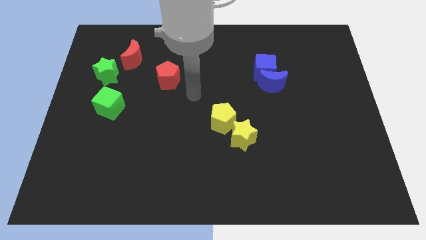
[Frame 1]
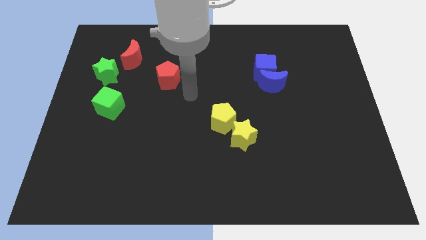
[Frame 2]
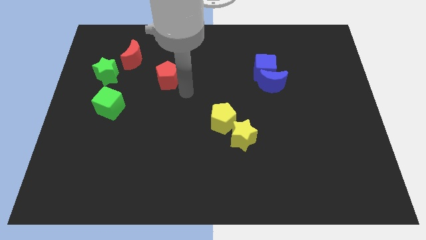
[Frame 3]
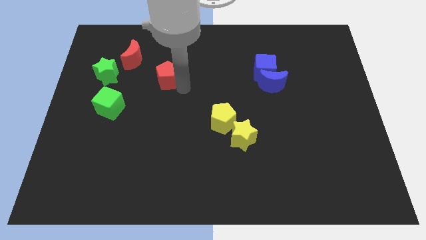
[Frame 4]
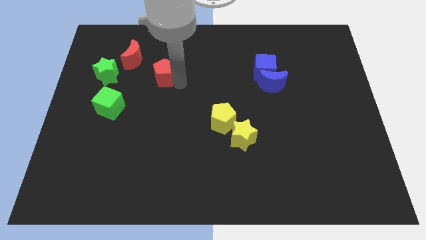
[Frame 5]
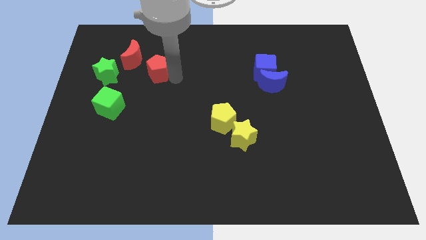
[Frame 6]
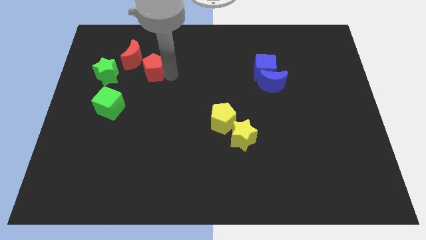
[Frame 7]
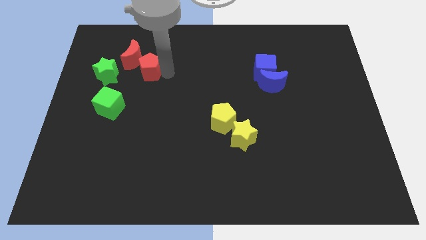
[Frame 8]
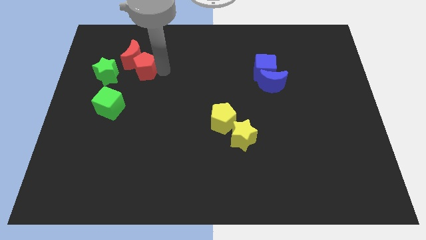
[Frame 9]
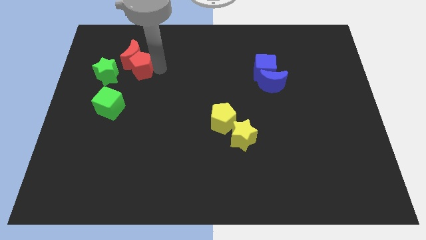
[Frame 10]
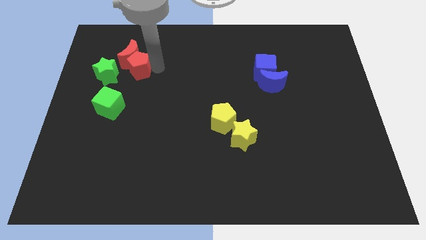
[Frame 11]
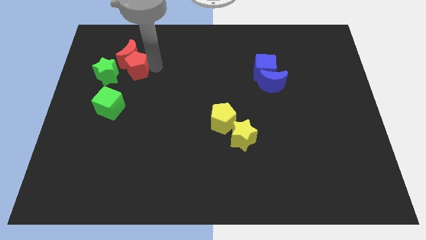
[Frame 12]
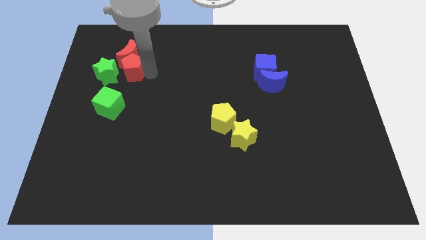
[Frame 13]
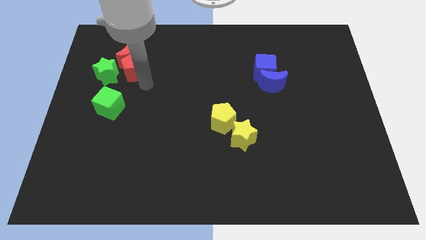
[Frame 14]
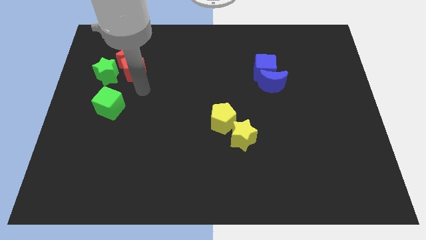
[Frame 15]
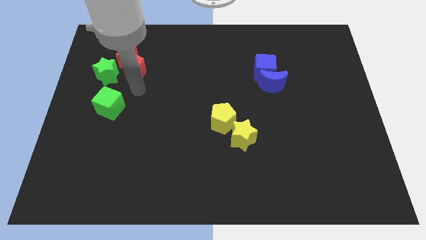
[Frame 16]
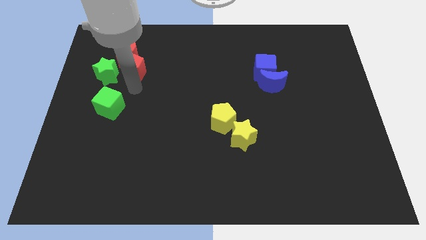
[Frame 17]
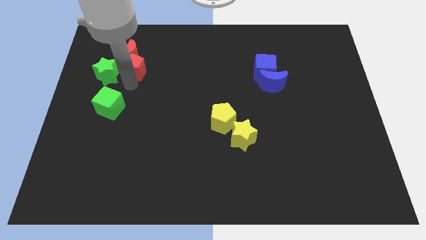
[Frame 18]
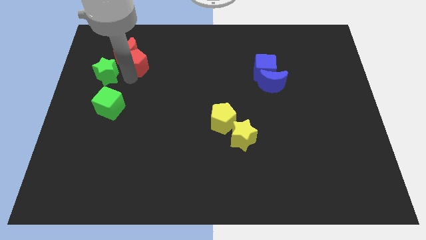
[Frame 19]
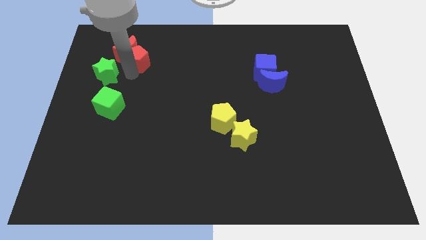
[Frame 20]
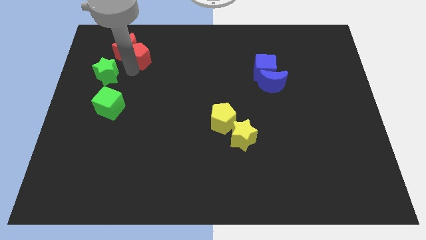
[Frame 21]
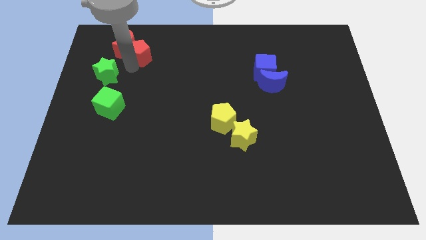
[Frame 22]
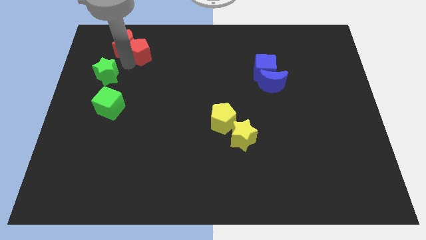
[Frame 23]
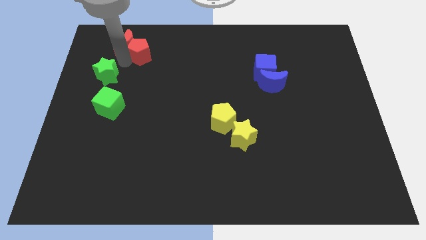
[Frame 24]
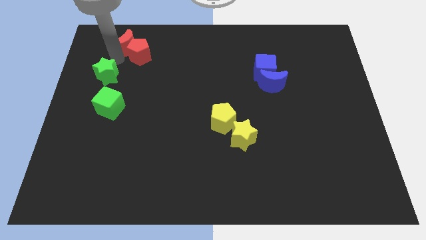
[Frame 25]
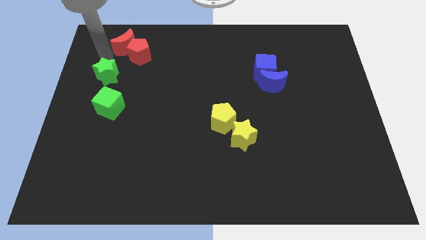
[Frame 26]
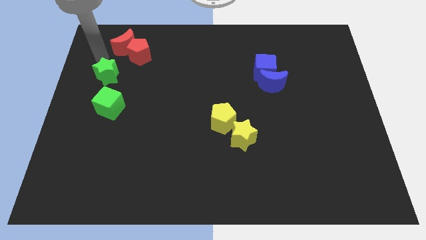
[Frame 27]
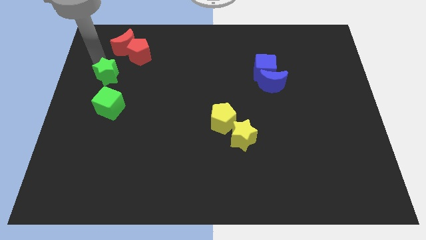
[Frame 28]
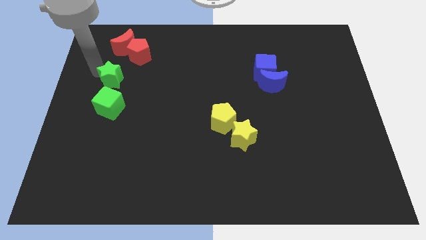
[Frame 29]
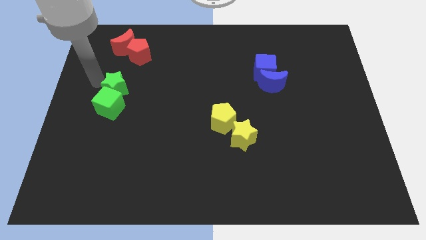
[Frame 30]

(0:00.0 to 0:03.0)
push the red crescent using the red pentagon to the top left of the board

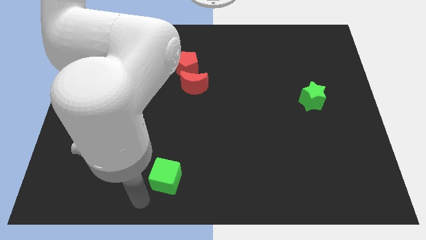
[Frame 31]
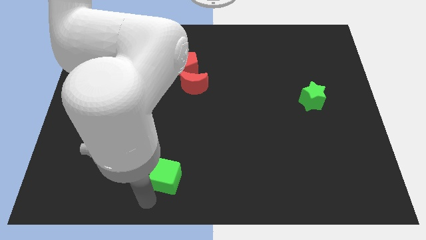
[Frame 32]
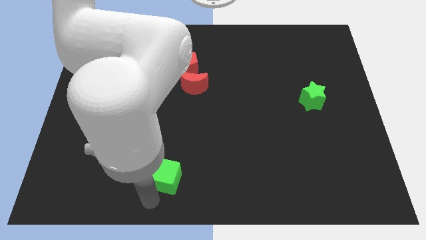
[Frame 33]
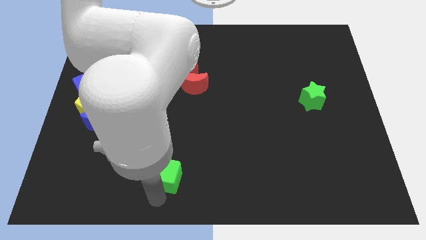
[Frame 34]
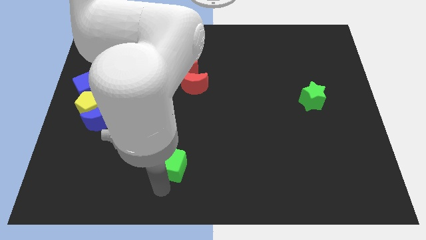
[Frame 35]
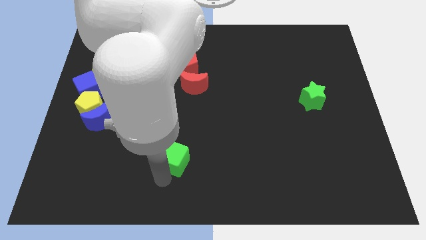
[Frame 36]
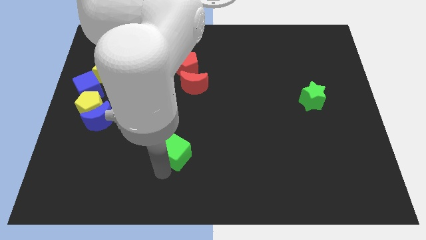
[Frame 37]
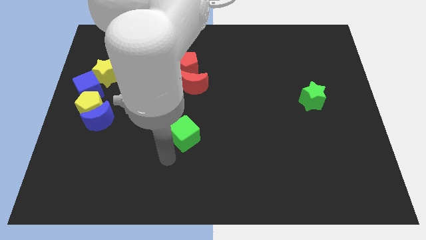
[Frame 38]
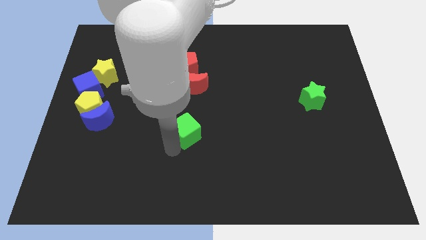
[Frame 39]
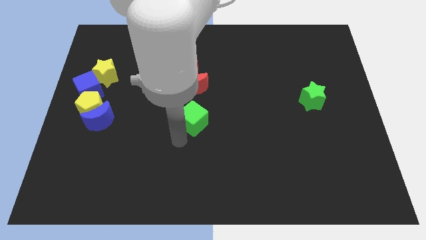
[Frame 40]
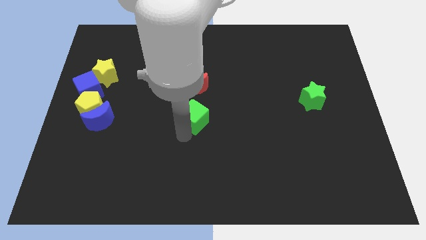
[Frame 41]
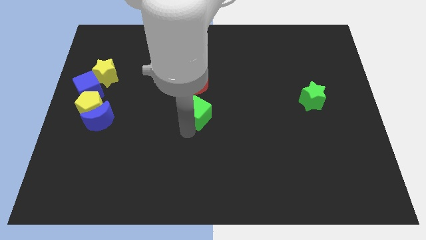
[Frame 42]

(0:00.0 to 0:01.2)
move the green cube to the center

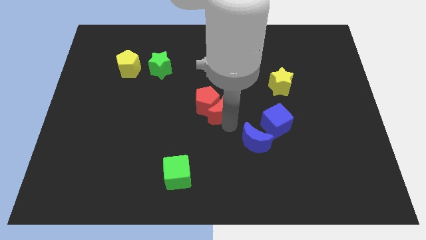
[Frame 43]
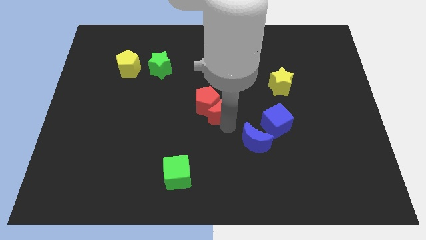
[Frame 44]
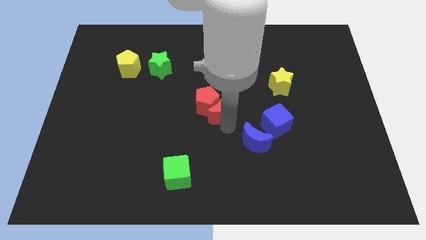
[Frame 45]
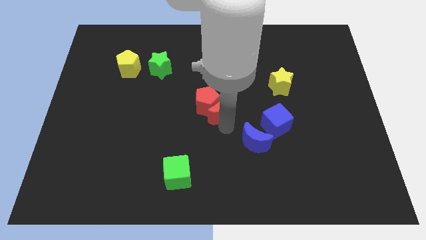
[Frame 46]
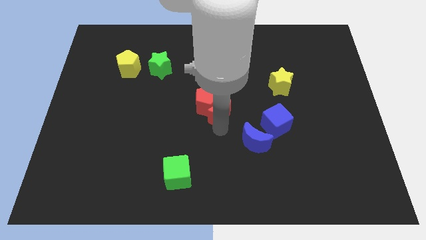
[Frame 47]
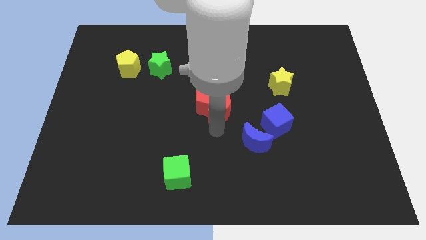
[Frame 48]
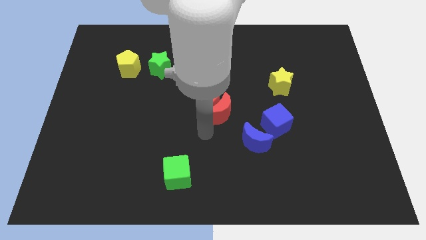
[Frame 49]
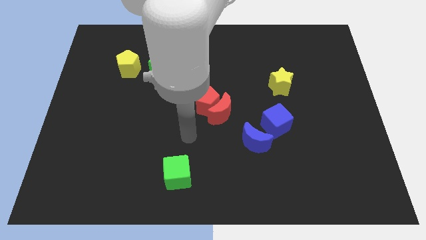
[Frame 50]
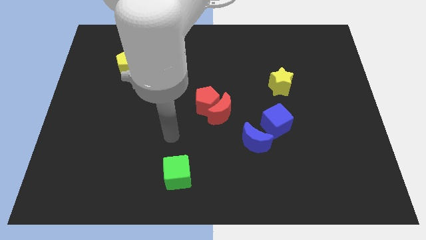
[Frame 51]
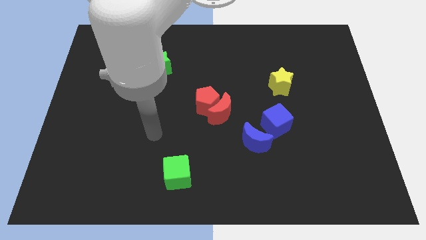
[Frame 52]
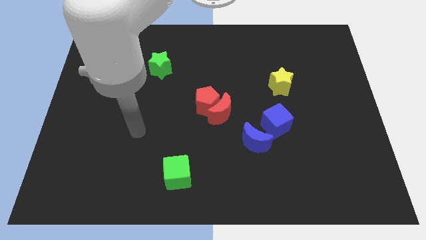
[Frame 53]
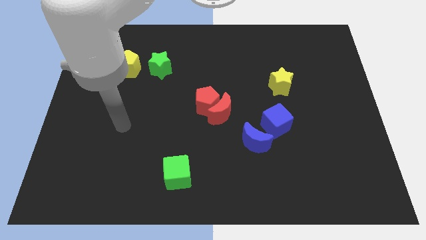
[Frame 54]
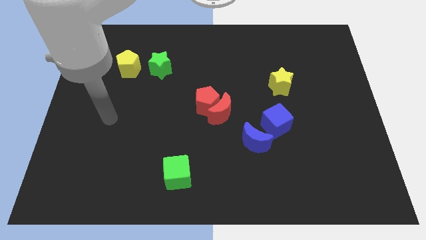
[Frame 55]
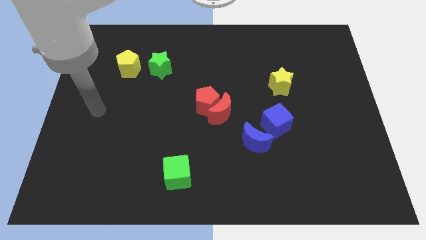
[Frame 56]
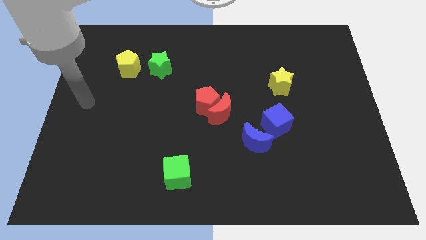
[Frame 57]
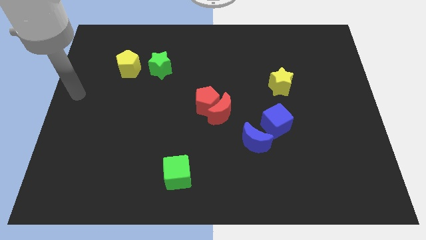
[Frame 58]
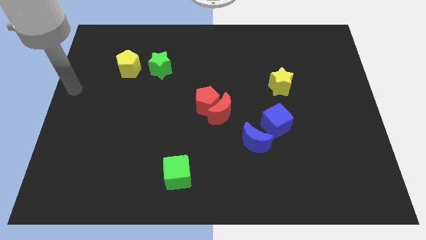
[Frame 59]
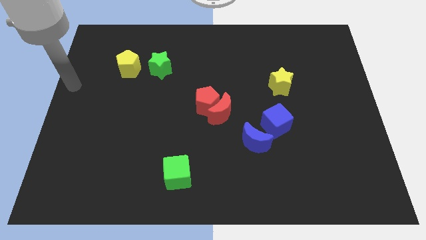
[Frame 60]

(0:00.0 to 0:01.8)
move the arm to the left center of the board

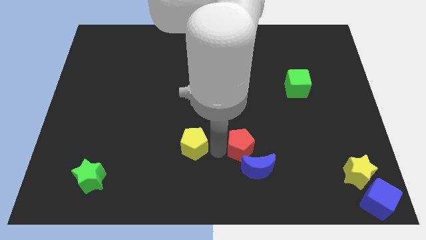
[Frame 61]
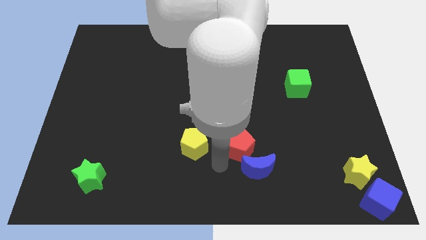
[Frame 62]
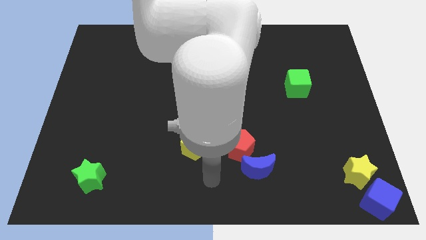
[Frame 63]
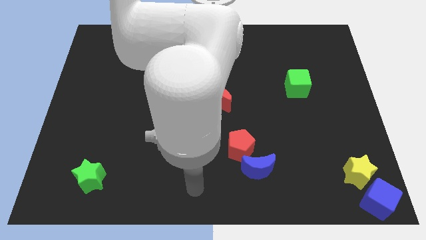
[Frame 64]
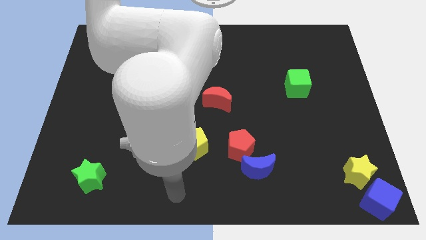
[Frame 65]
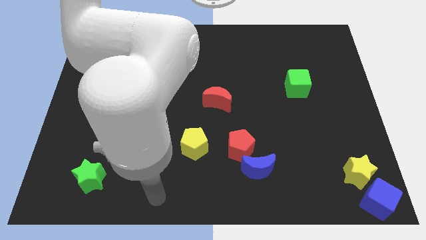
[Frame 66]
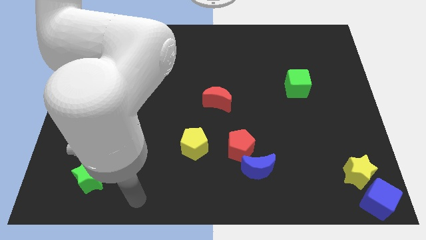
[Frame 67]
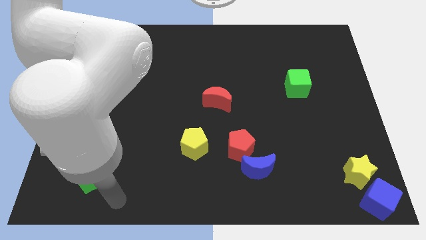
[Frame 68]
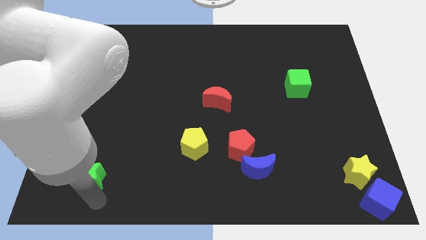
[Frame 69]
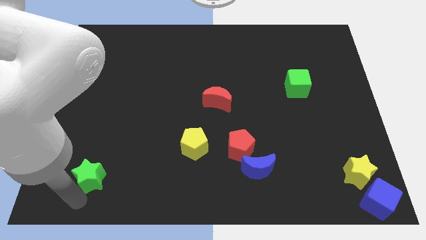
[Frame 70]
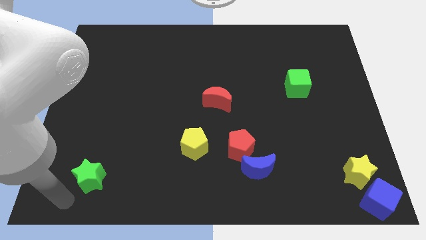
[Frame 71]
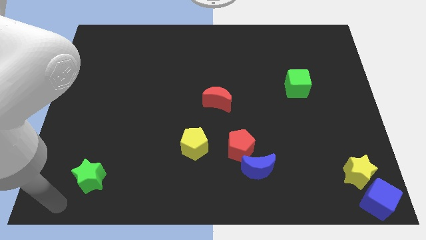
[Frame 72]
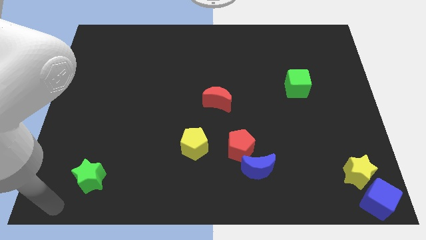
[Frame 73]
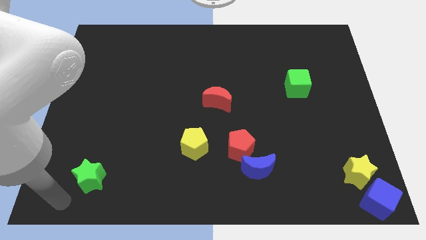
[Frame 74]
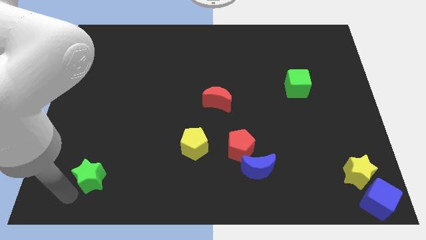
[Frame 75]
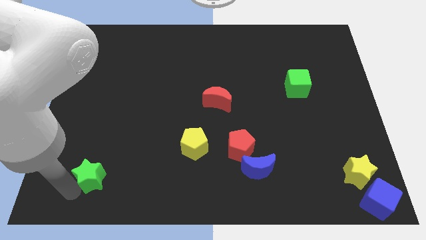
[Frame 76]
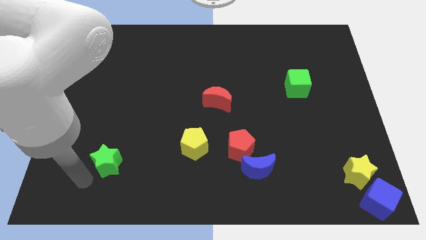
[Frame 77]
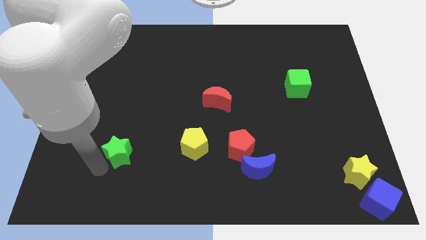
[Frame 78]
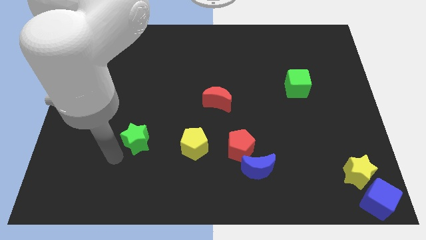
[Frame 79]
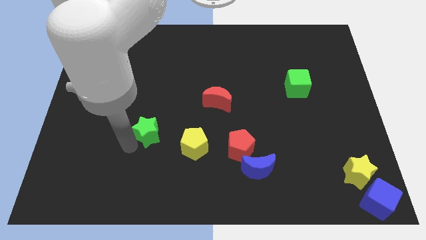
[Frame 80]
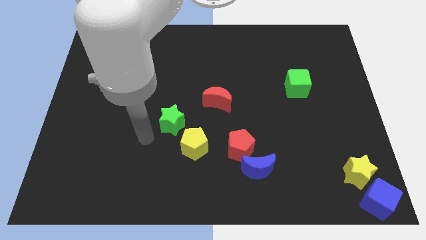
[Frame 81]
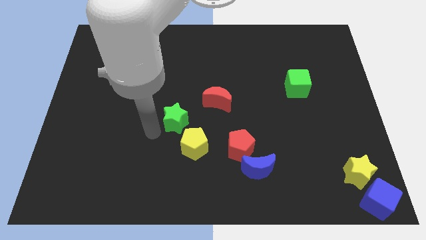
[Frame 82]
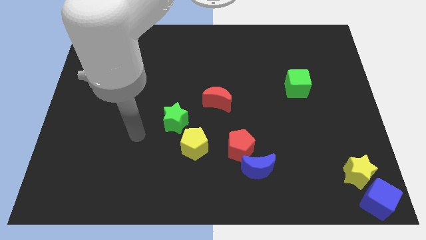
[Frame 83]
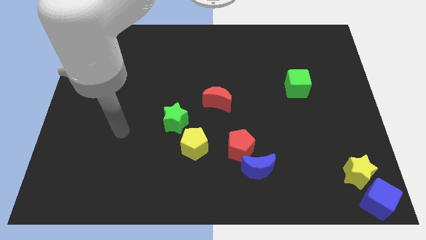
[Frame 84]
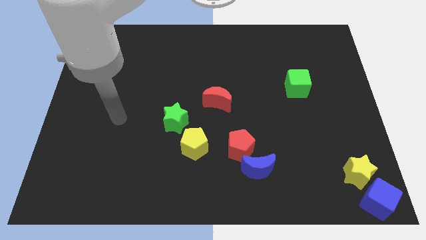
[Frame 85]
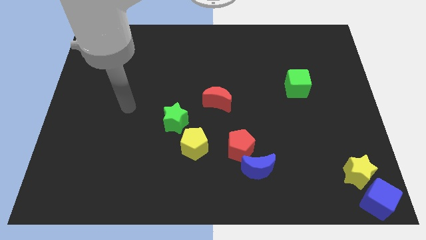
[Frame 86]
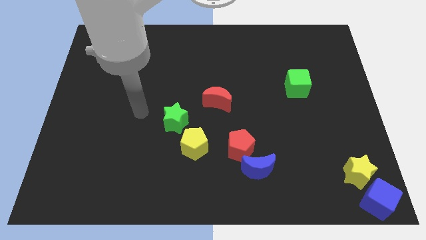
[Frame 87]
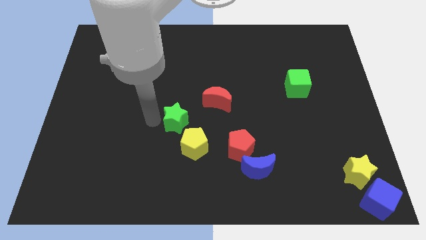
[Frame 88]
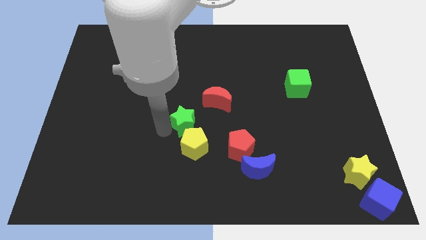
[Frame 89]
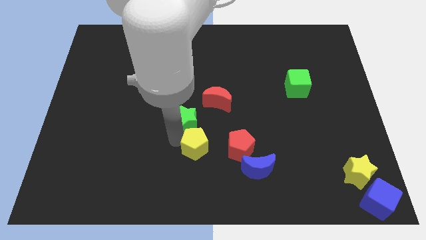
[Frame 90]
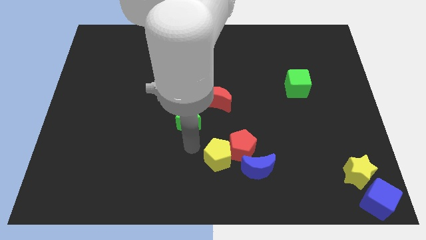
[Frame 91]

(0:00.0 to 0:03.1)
place the green star above the yellow pentagon
